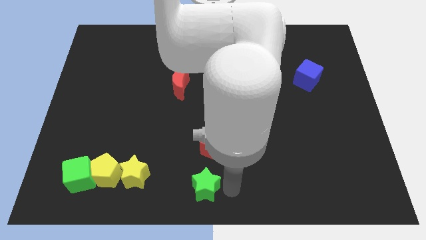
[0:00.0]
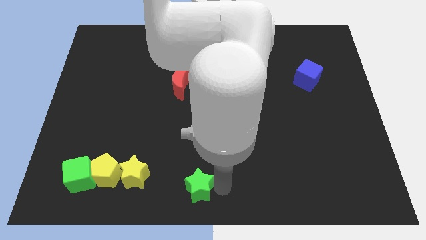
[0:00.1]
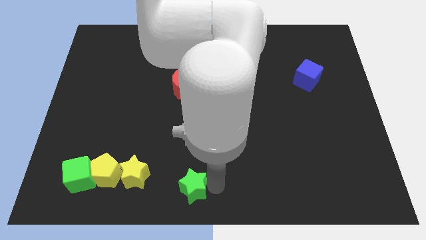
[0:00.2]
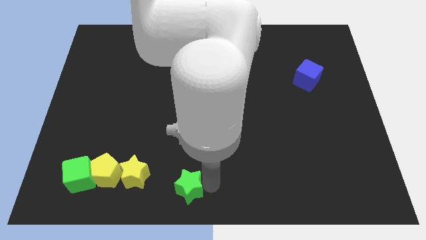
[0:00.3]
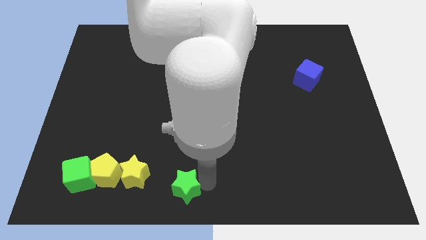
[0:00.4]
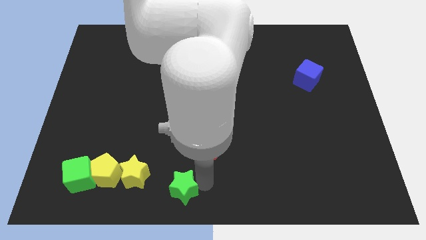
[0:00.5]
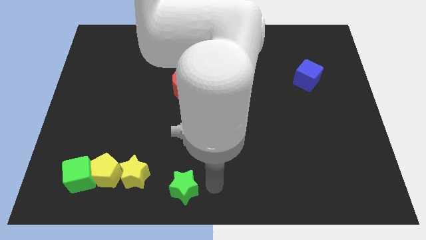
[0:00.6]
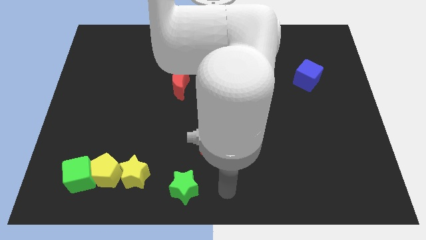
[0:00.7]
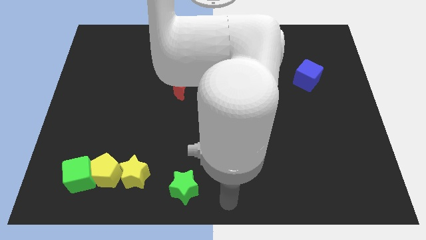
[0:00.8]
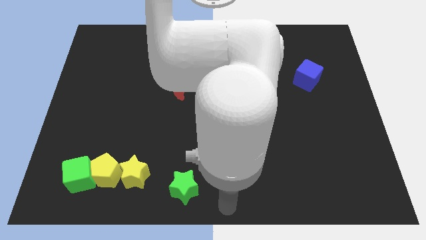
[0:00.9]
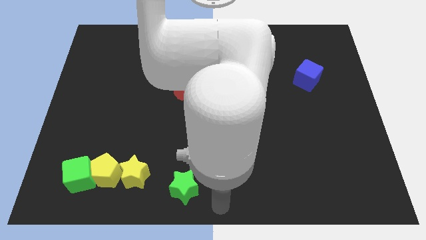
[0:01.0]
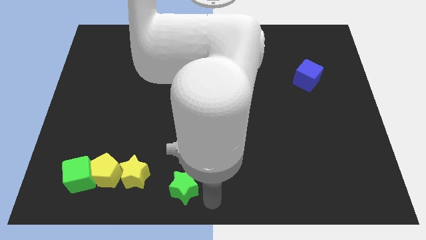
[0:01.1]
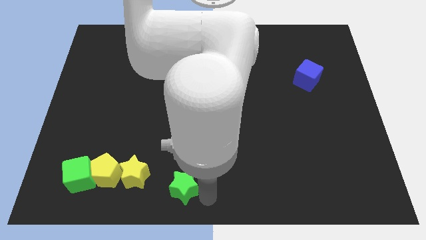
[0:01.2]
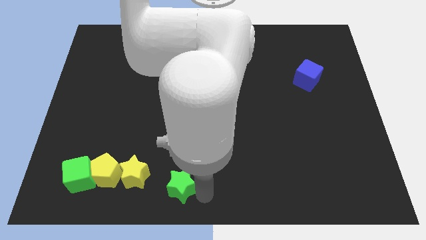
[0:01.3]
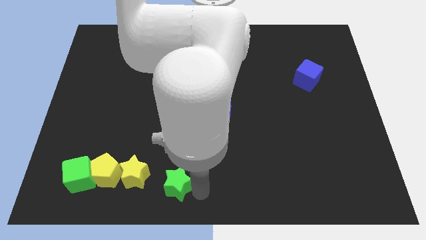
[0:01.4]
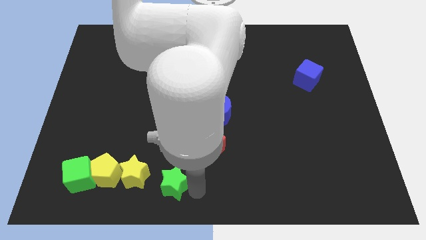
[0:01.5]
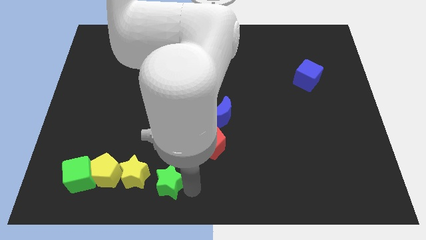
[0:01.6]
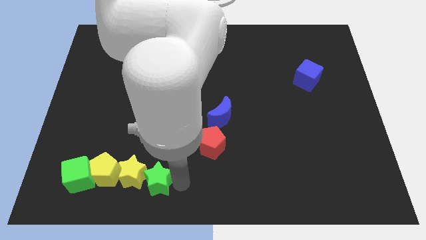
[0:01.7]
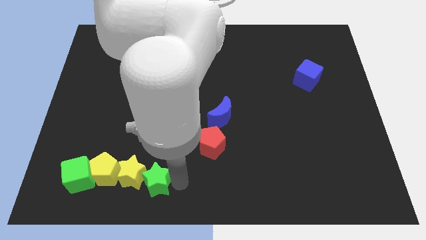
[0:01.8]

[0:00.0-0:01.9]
place green star near yellow star

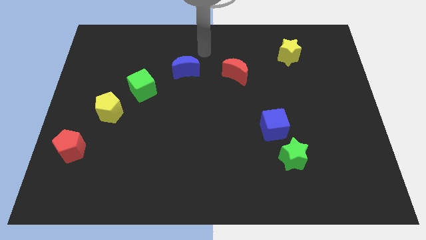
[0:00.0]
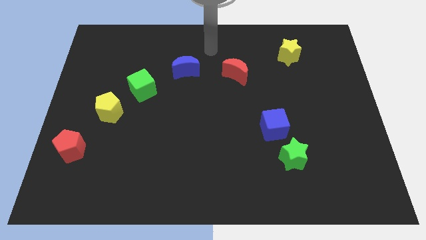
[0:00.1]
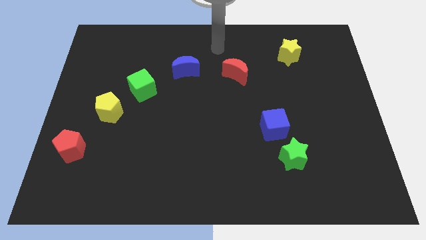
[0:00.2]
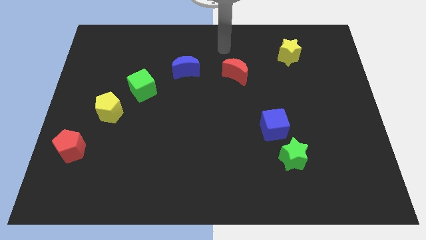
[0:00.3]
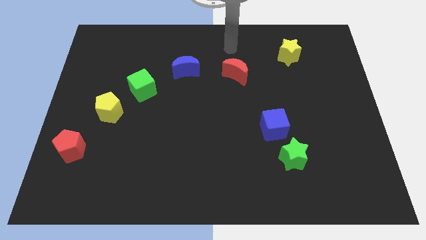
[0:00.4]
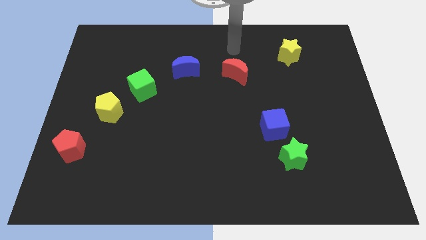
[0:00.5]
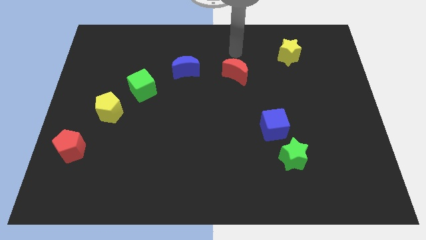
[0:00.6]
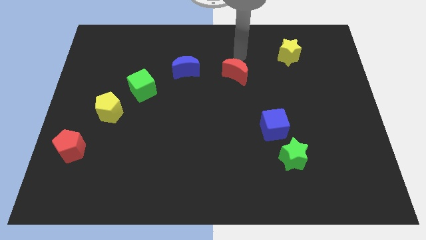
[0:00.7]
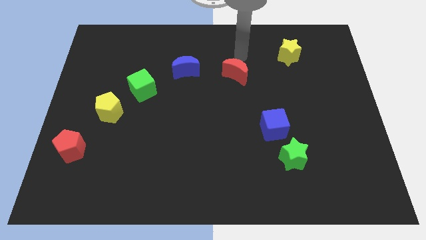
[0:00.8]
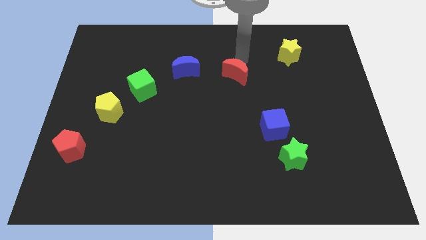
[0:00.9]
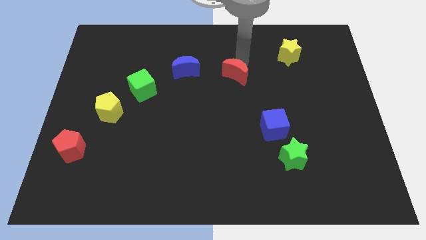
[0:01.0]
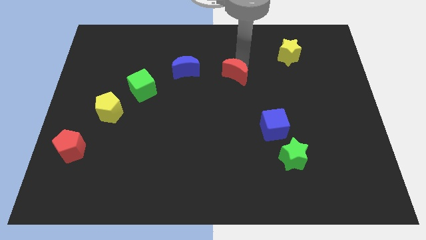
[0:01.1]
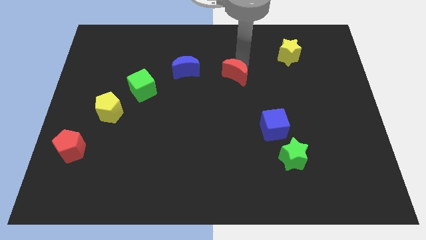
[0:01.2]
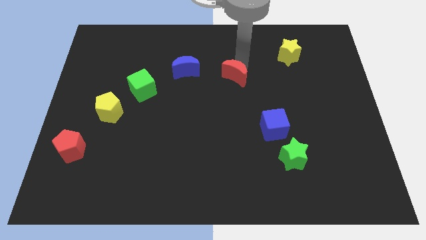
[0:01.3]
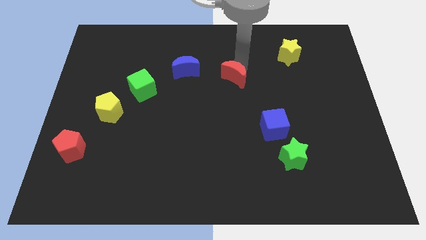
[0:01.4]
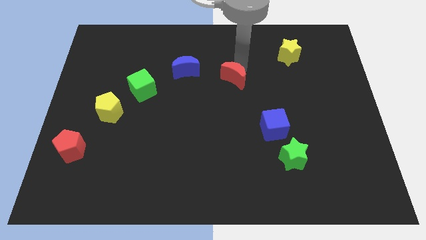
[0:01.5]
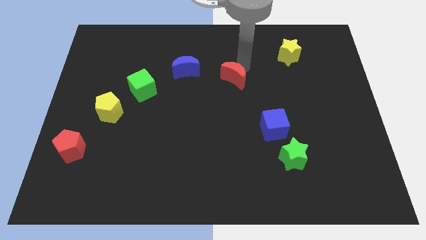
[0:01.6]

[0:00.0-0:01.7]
slightly push the red moon downwards

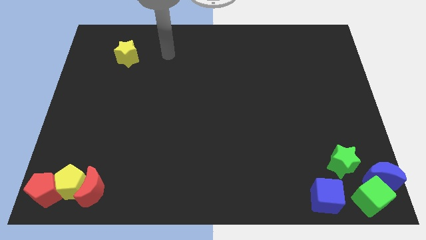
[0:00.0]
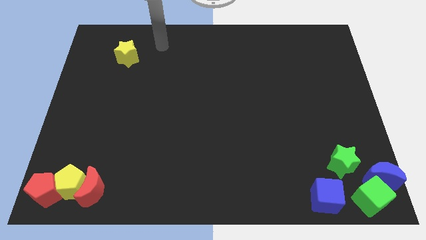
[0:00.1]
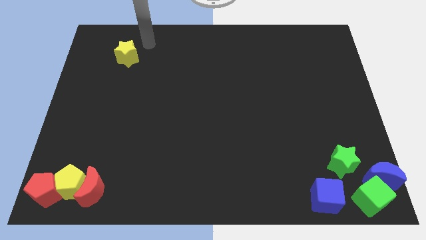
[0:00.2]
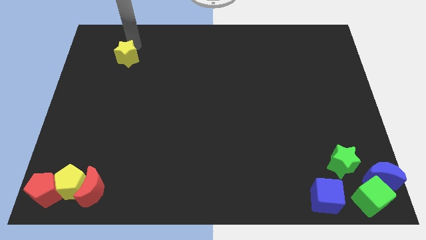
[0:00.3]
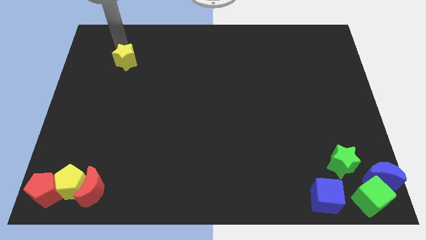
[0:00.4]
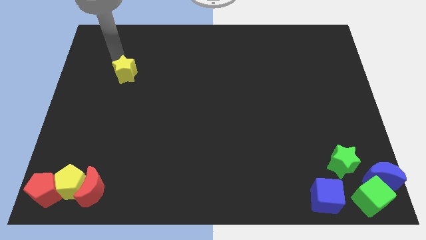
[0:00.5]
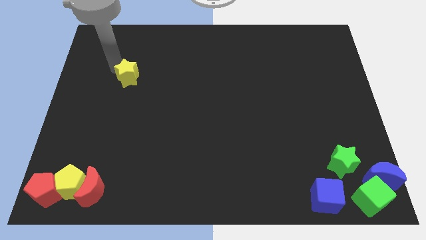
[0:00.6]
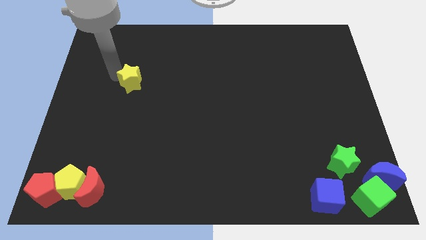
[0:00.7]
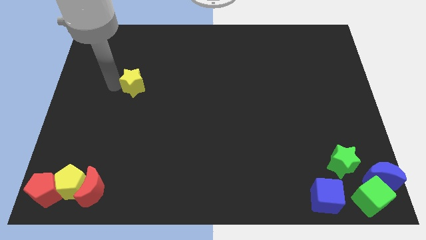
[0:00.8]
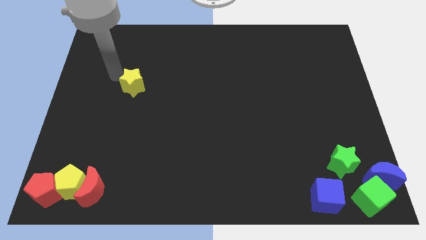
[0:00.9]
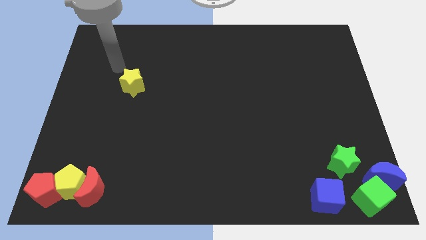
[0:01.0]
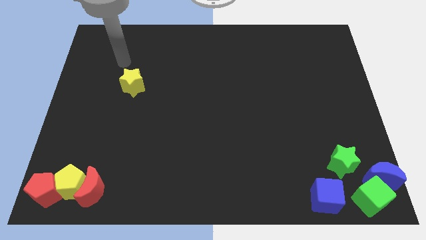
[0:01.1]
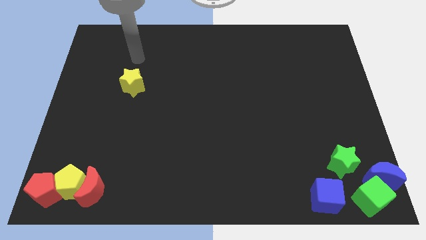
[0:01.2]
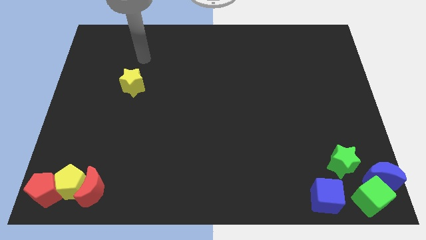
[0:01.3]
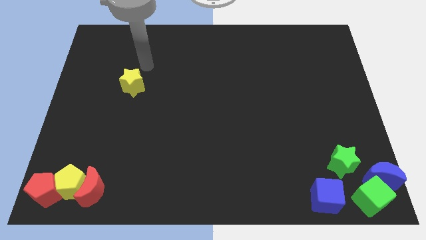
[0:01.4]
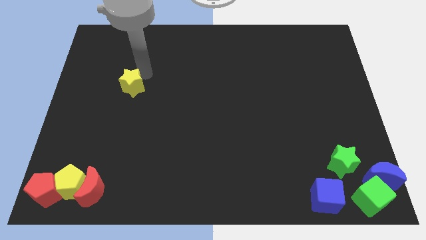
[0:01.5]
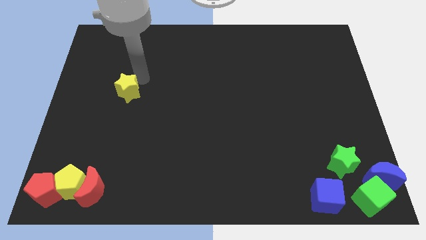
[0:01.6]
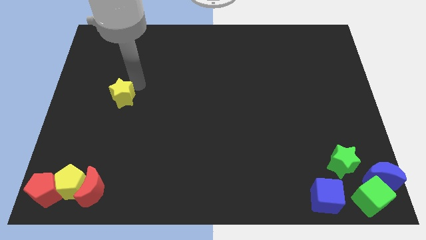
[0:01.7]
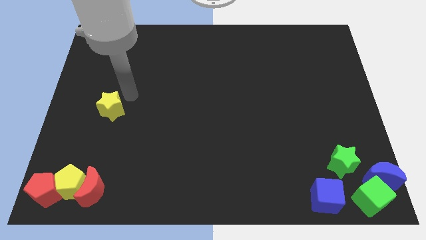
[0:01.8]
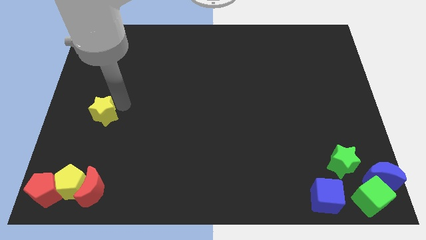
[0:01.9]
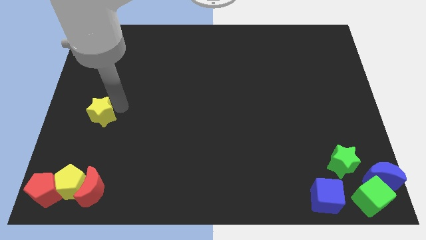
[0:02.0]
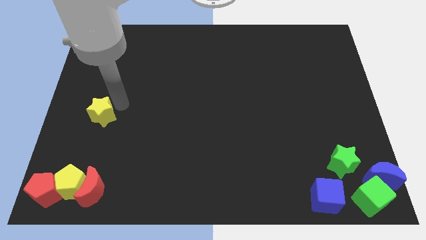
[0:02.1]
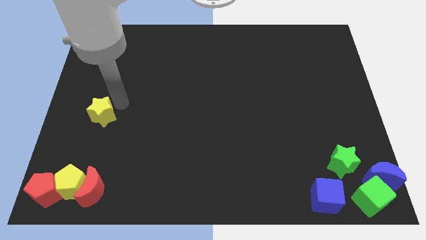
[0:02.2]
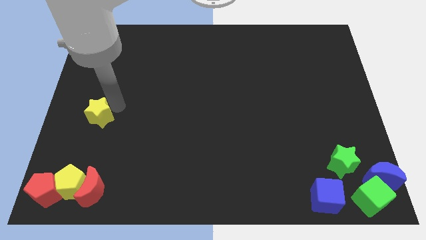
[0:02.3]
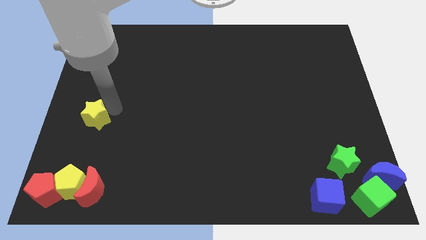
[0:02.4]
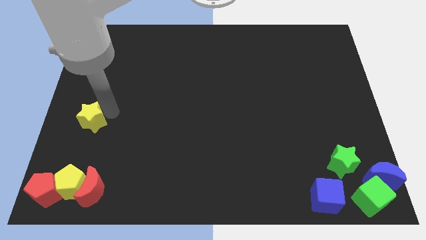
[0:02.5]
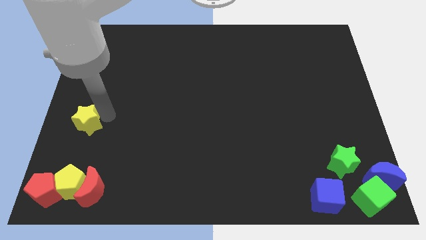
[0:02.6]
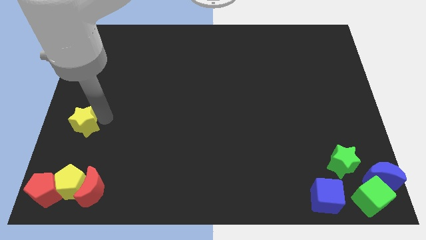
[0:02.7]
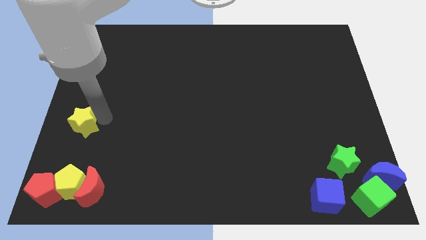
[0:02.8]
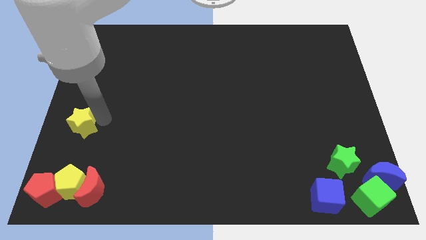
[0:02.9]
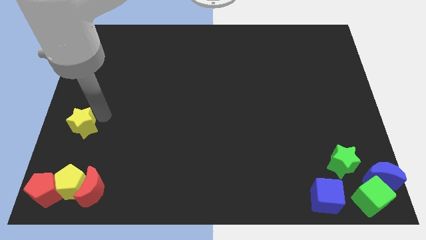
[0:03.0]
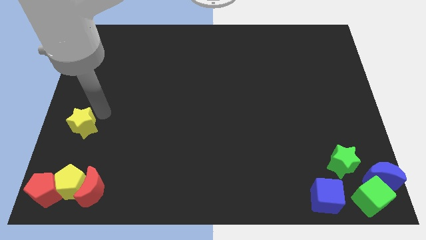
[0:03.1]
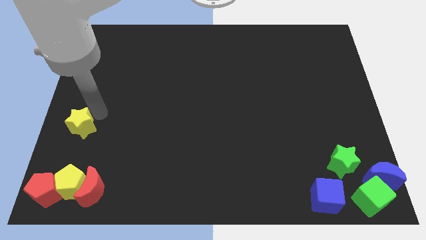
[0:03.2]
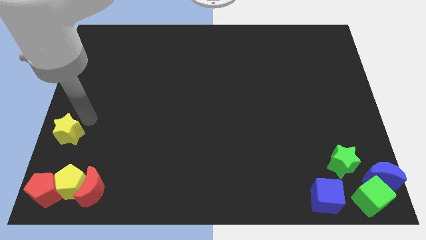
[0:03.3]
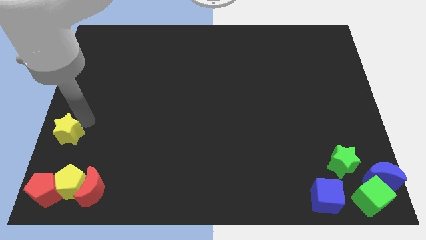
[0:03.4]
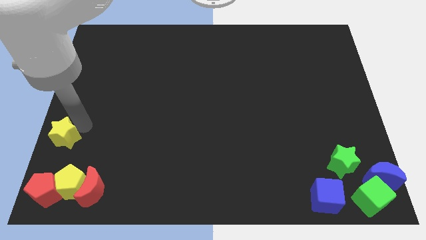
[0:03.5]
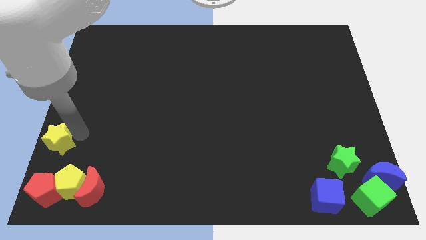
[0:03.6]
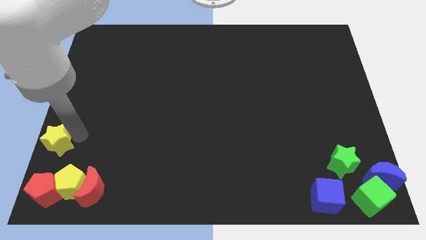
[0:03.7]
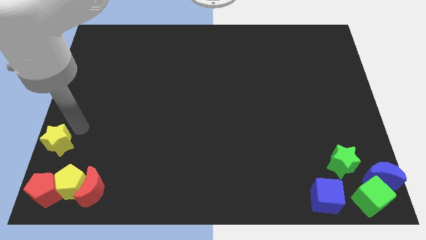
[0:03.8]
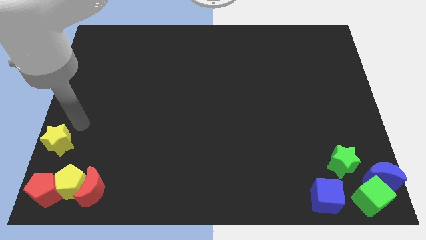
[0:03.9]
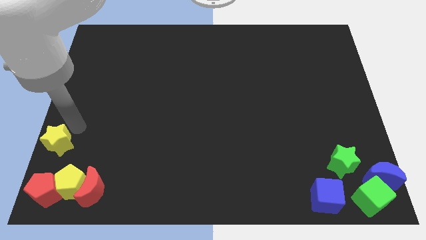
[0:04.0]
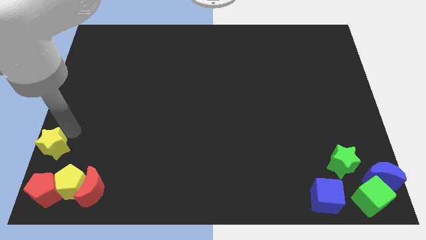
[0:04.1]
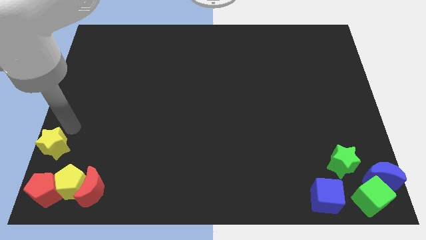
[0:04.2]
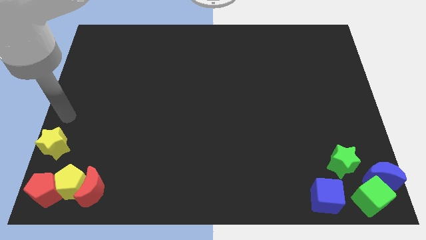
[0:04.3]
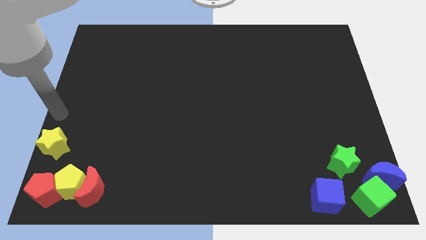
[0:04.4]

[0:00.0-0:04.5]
slide the yellow star towards the top side of the red pentagon

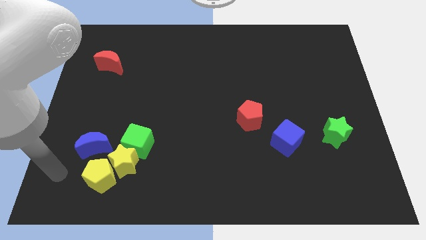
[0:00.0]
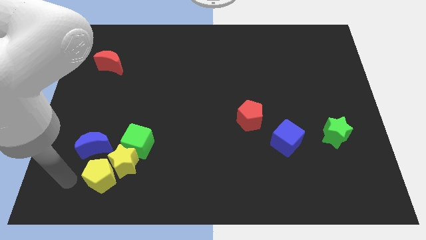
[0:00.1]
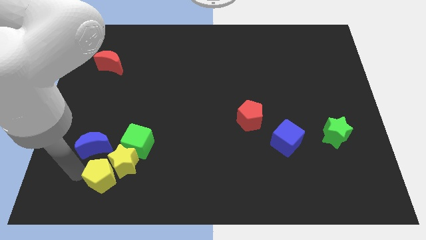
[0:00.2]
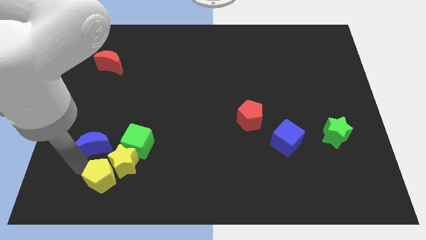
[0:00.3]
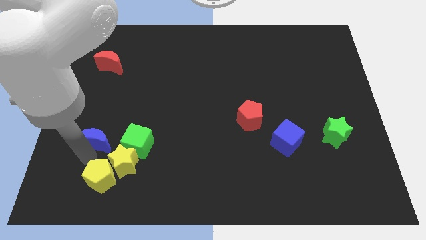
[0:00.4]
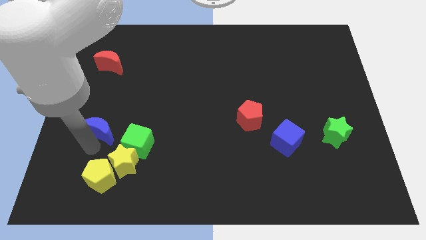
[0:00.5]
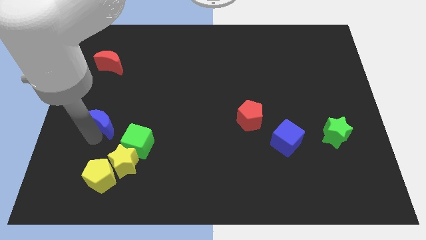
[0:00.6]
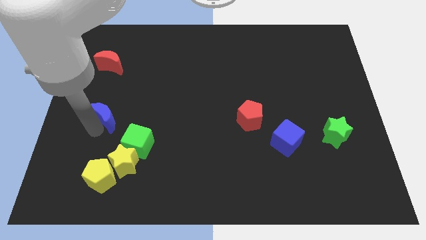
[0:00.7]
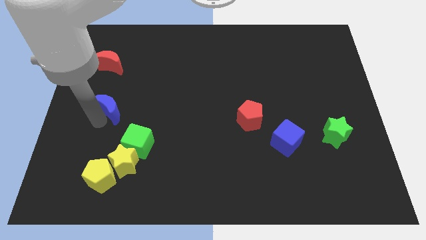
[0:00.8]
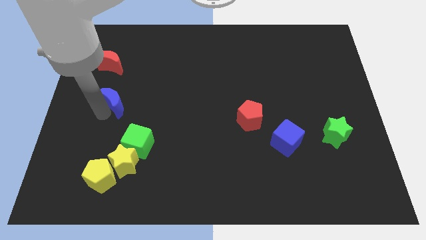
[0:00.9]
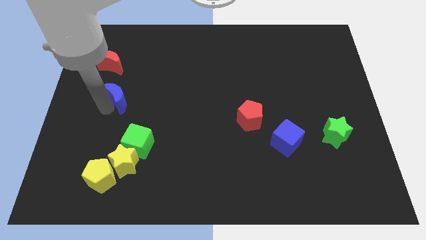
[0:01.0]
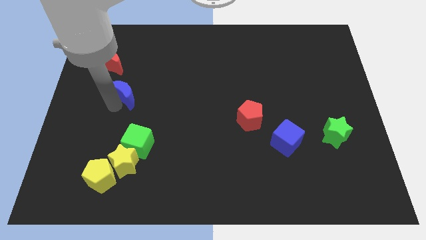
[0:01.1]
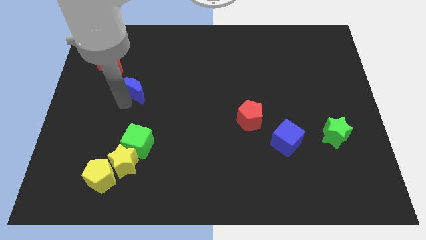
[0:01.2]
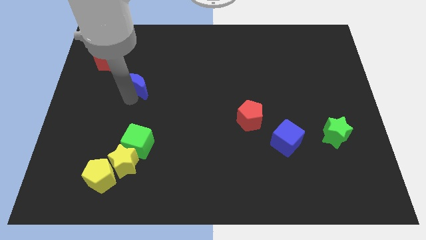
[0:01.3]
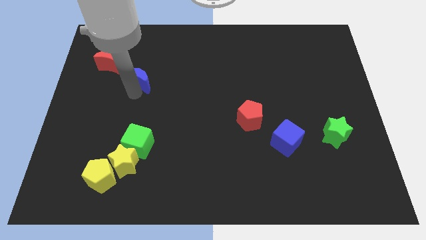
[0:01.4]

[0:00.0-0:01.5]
place the blue moon diagonally to red moon
